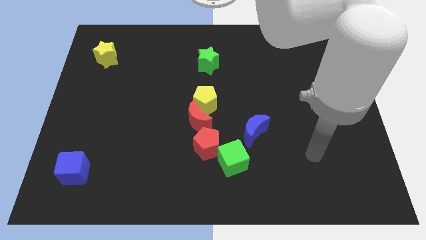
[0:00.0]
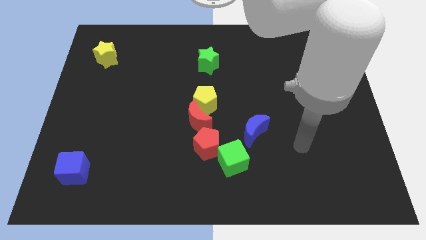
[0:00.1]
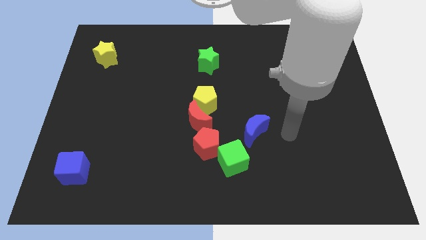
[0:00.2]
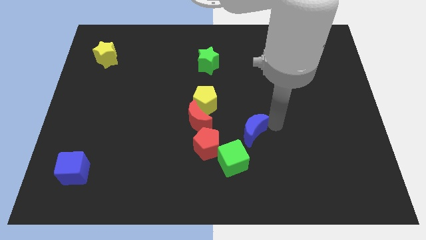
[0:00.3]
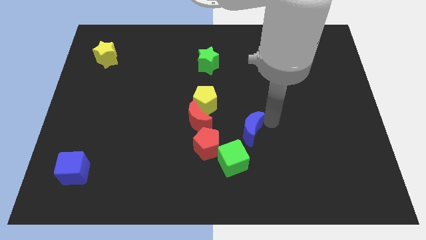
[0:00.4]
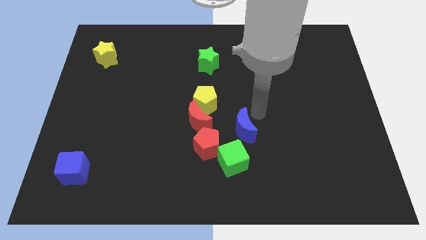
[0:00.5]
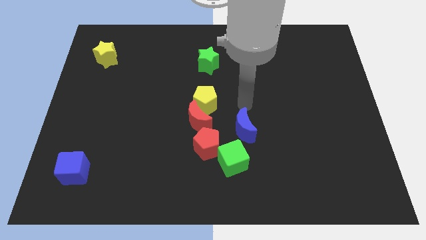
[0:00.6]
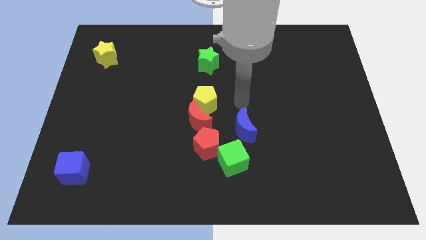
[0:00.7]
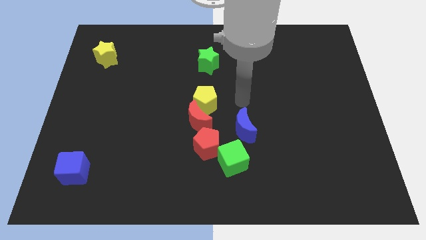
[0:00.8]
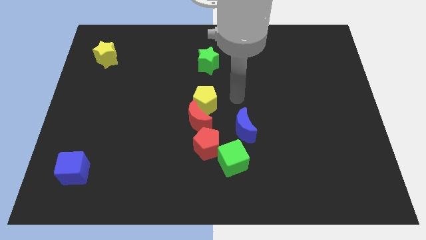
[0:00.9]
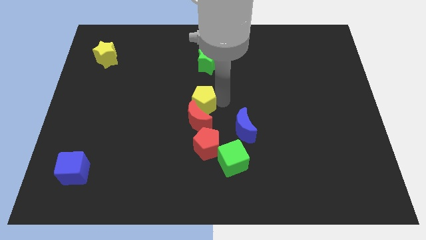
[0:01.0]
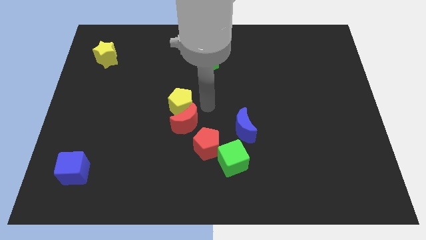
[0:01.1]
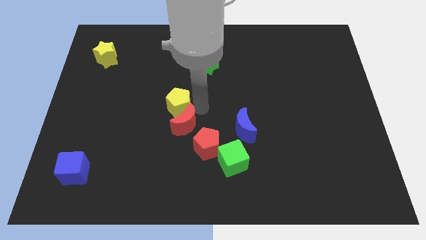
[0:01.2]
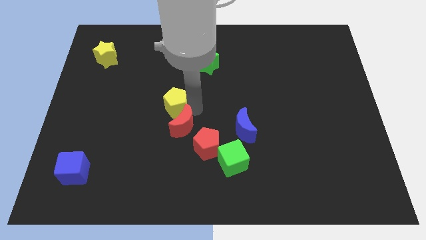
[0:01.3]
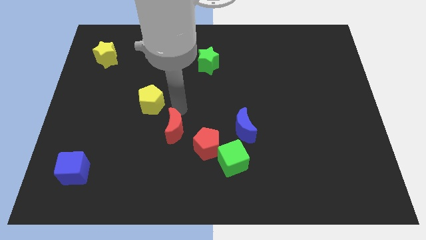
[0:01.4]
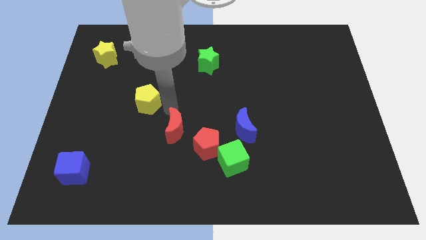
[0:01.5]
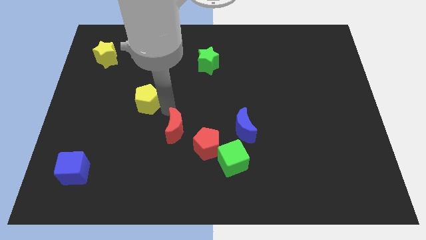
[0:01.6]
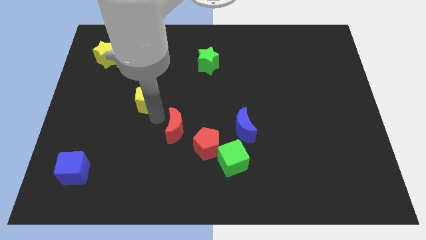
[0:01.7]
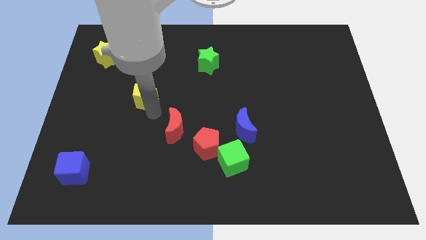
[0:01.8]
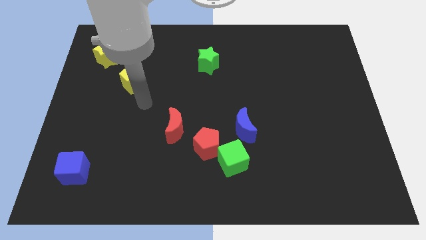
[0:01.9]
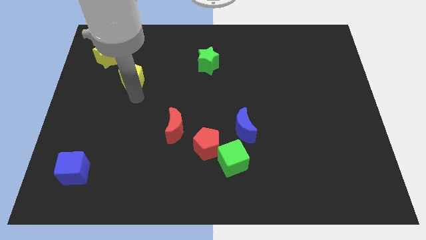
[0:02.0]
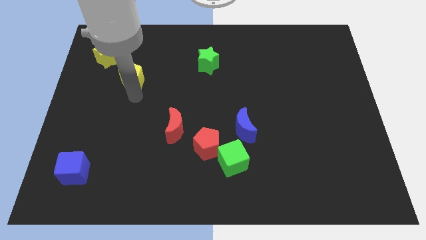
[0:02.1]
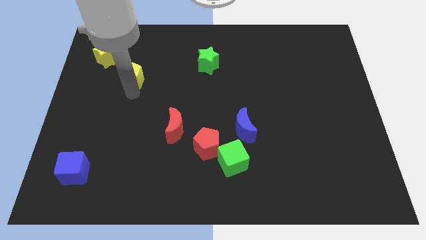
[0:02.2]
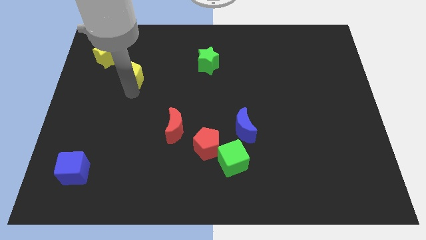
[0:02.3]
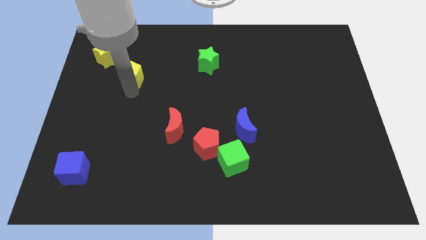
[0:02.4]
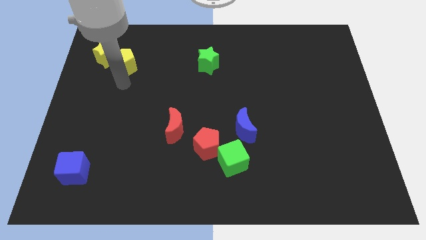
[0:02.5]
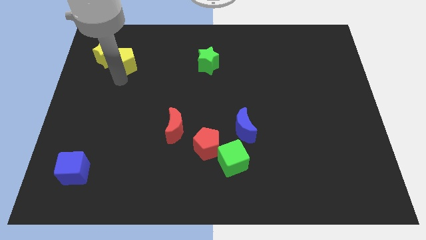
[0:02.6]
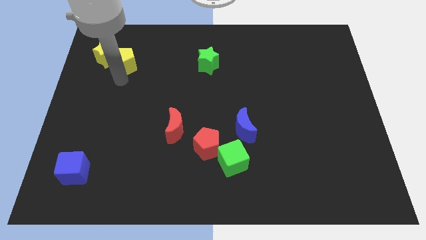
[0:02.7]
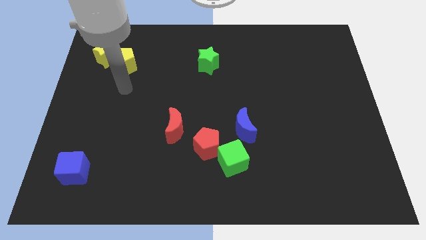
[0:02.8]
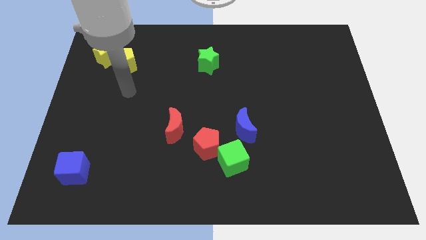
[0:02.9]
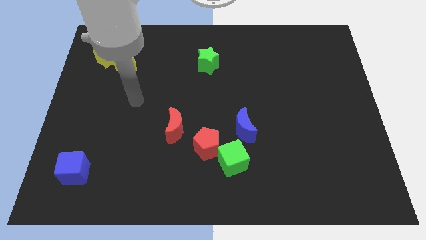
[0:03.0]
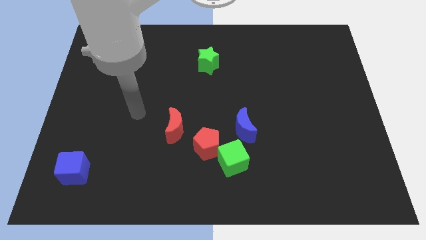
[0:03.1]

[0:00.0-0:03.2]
move the yellow pentagon towards the yellow star

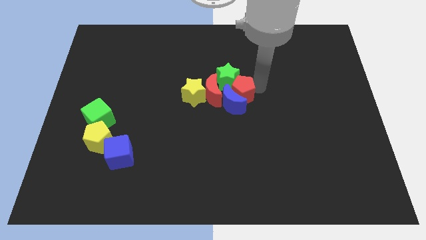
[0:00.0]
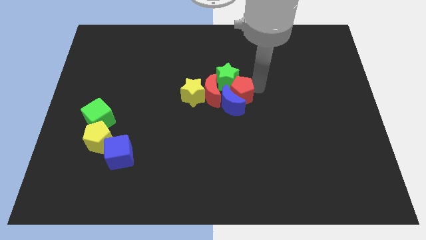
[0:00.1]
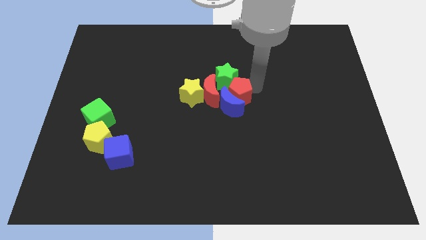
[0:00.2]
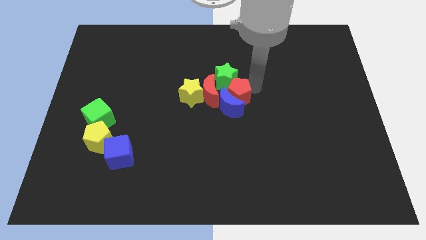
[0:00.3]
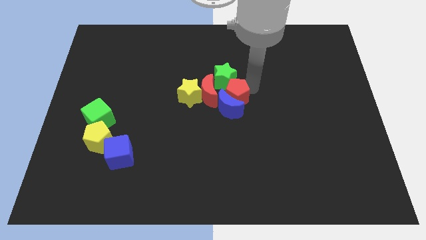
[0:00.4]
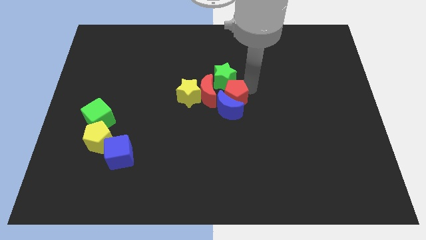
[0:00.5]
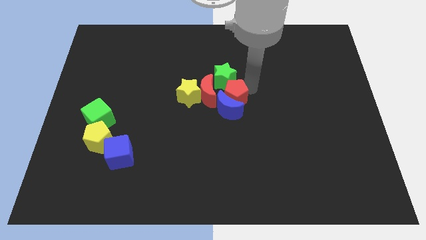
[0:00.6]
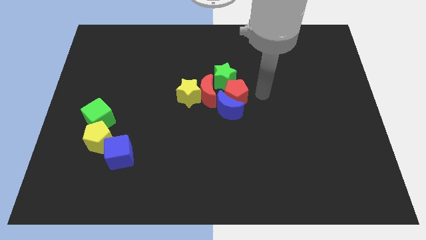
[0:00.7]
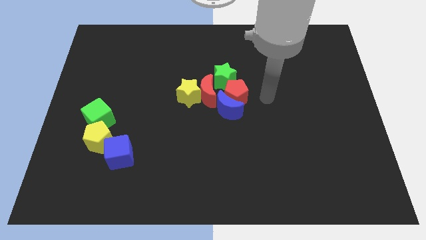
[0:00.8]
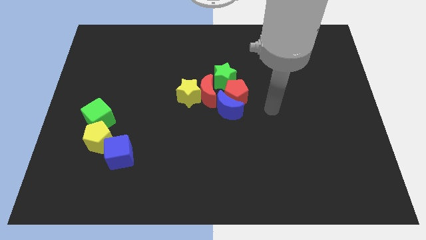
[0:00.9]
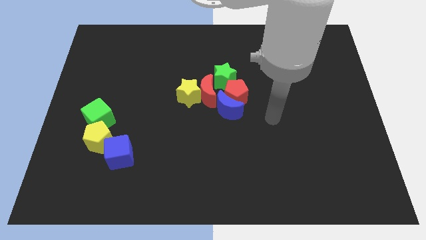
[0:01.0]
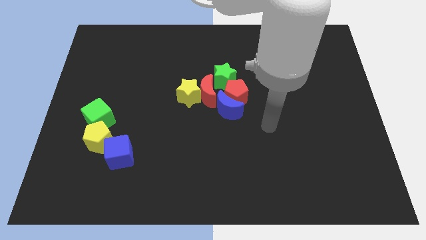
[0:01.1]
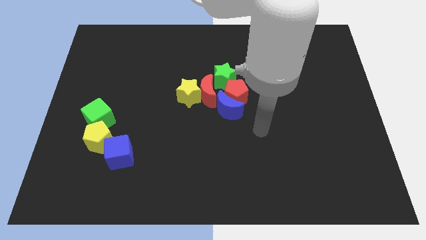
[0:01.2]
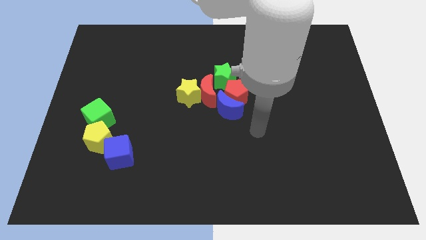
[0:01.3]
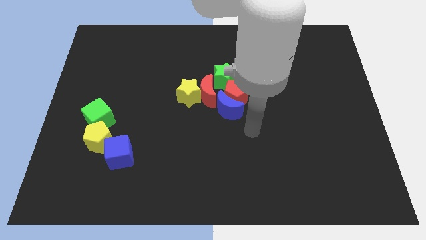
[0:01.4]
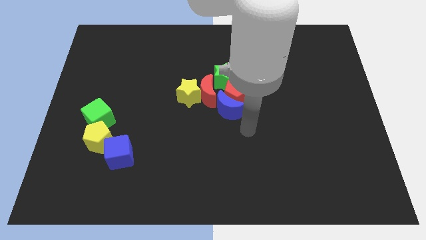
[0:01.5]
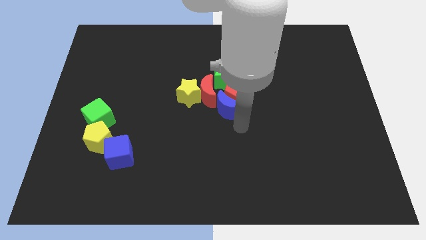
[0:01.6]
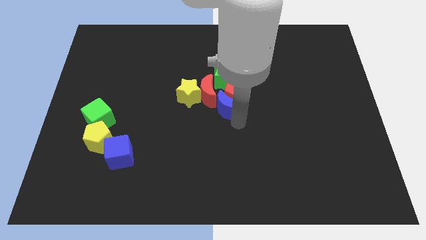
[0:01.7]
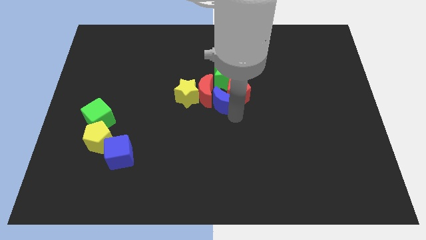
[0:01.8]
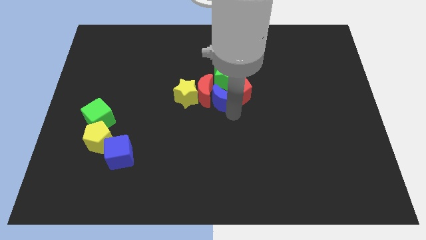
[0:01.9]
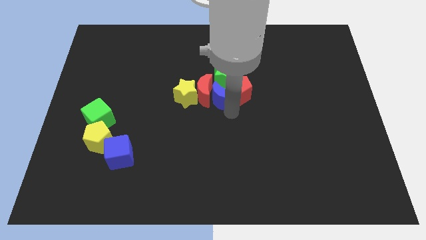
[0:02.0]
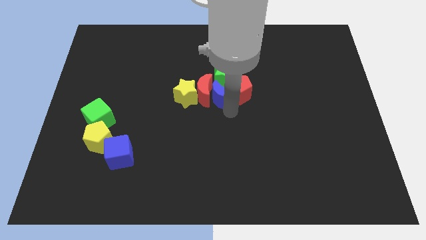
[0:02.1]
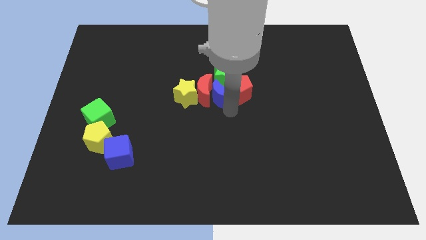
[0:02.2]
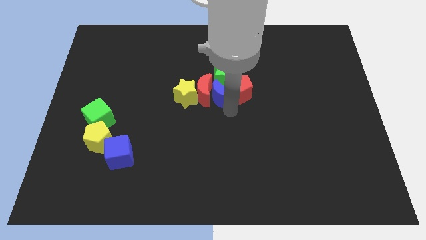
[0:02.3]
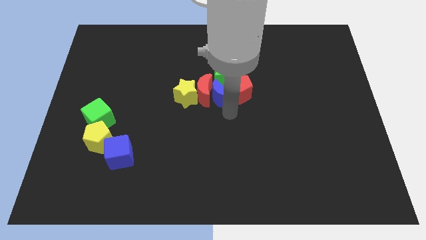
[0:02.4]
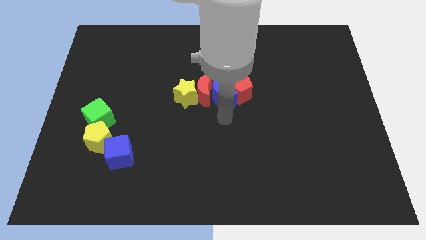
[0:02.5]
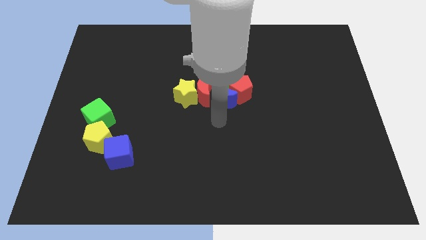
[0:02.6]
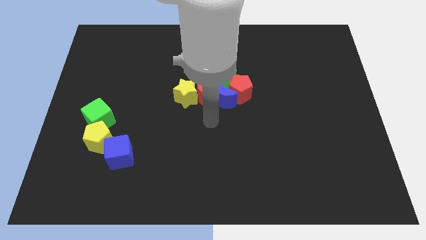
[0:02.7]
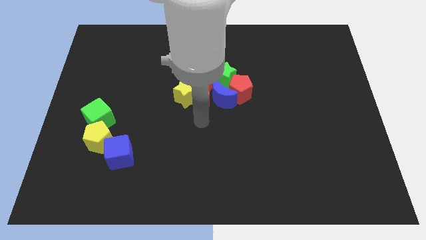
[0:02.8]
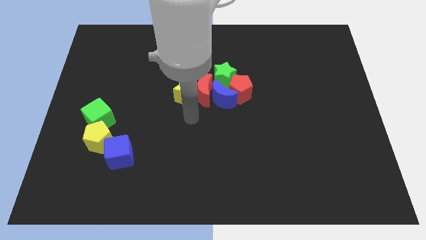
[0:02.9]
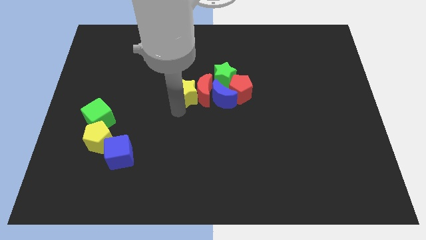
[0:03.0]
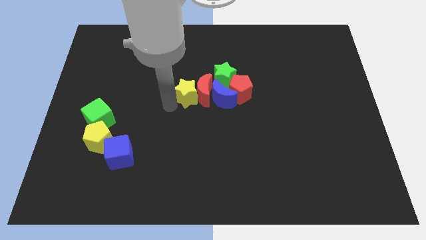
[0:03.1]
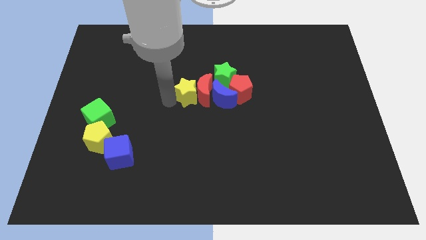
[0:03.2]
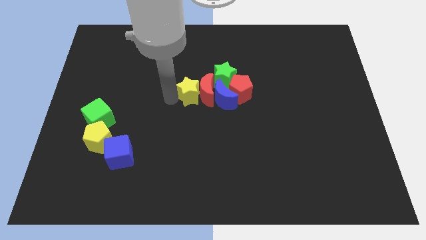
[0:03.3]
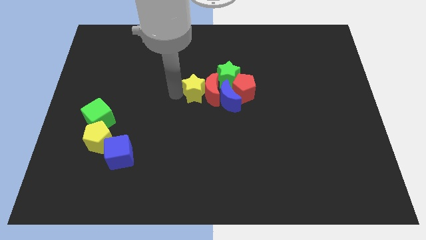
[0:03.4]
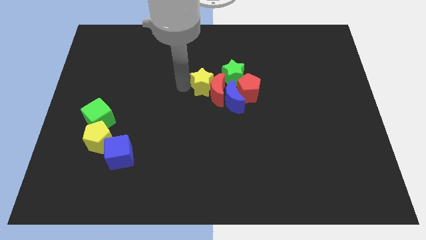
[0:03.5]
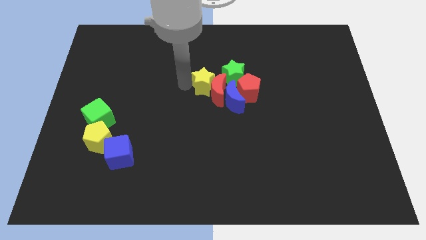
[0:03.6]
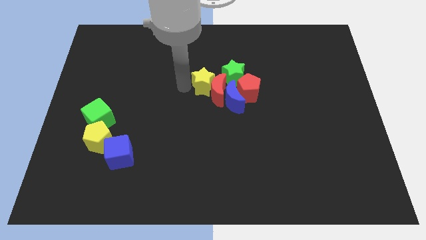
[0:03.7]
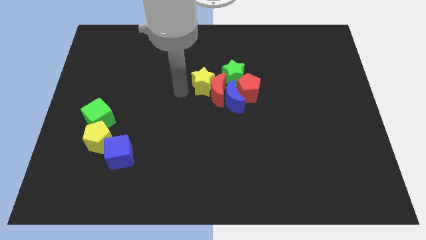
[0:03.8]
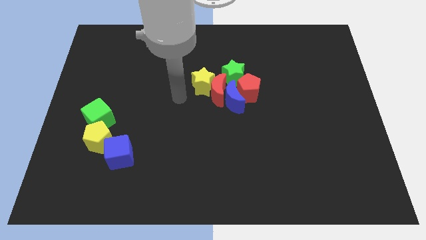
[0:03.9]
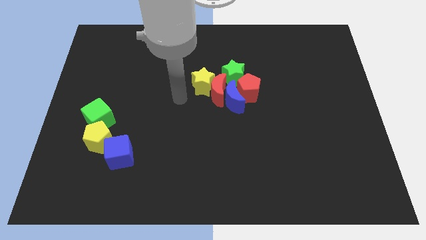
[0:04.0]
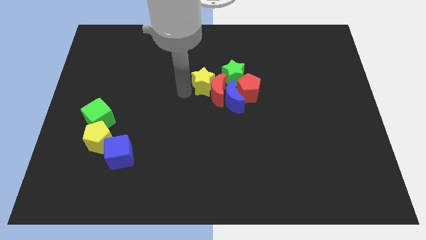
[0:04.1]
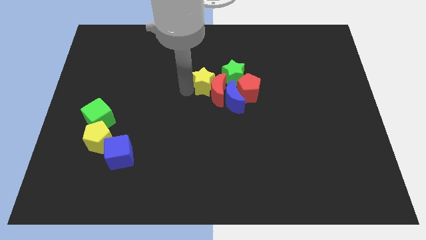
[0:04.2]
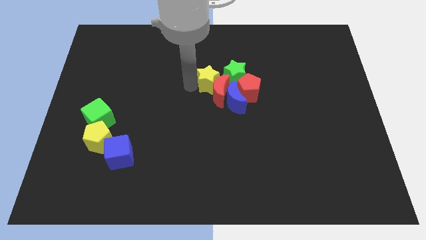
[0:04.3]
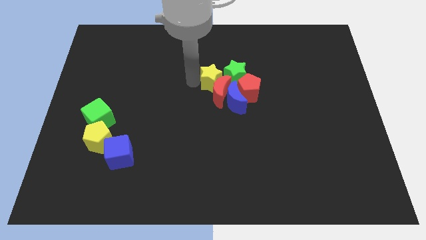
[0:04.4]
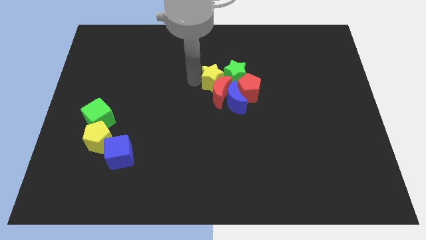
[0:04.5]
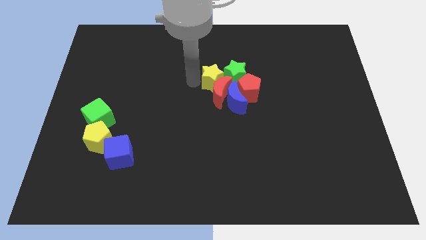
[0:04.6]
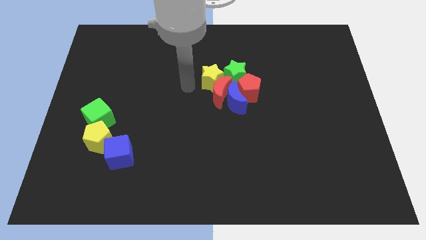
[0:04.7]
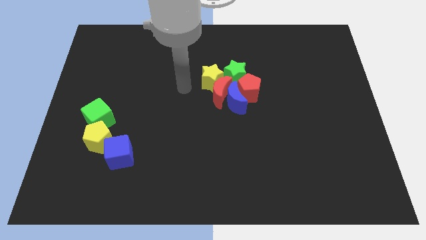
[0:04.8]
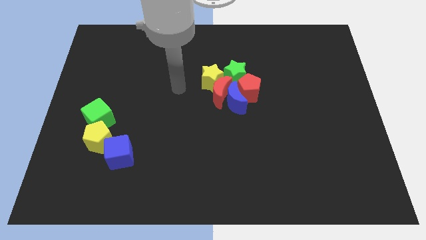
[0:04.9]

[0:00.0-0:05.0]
push the yellow star into the red crescent

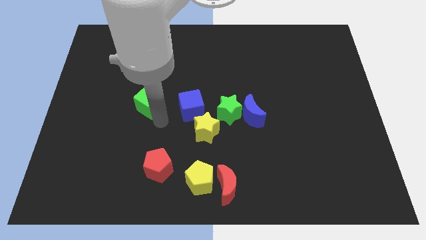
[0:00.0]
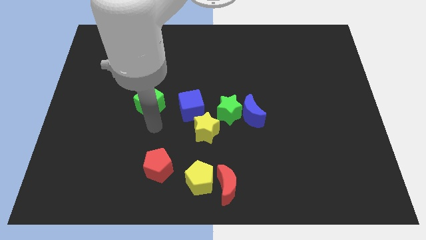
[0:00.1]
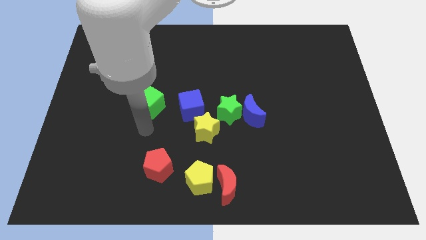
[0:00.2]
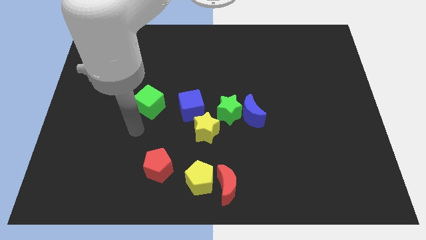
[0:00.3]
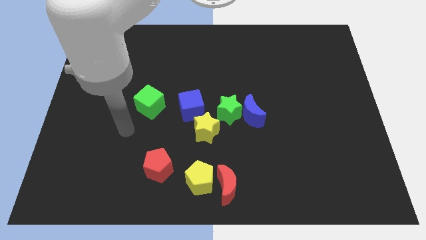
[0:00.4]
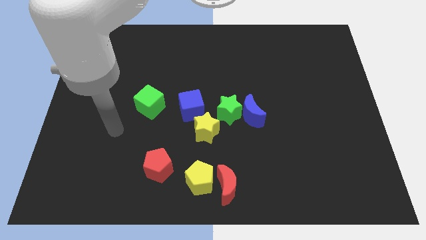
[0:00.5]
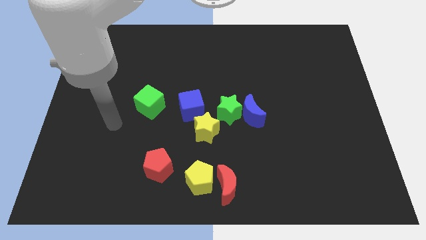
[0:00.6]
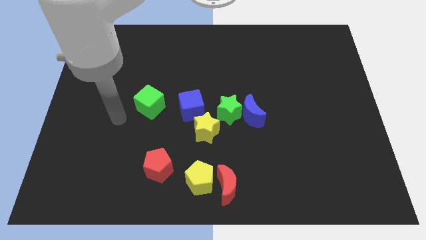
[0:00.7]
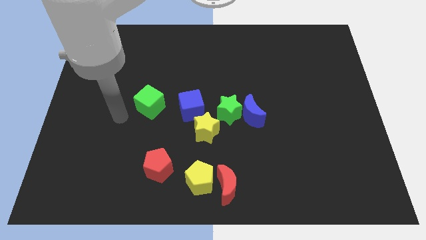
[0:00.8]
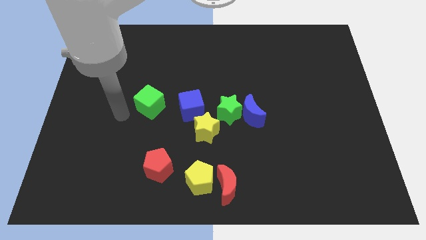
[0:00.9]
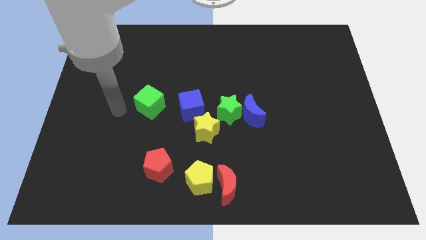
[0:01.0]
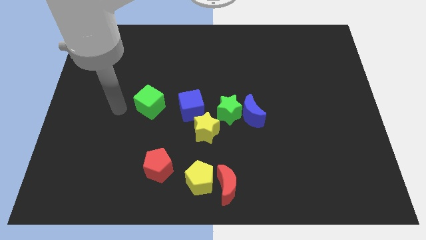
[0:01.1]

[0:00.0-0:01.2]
move your arm to the left of green cube
